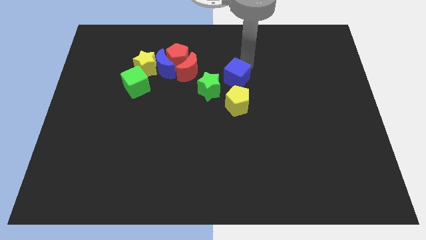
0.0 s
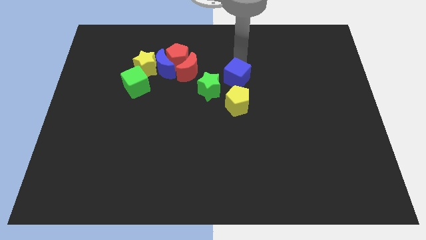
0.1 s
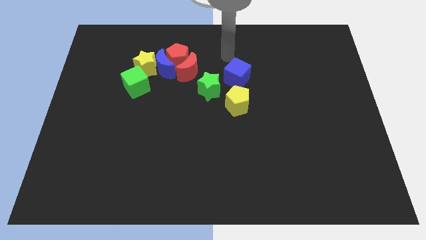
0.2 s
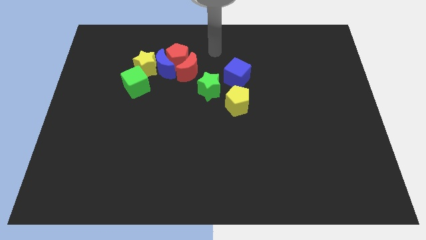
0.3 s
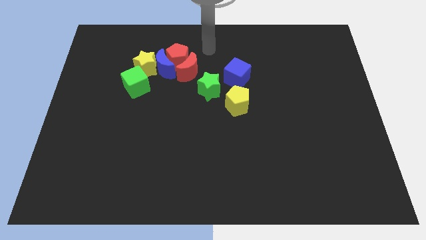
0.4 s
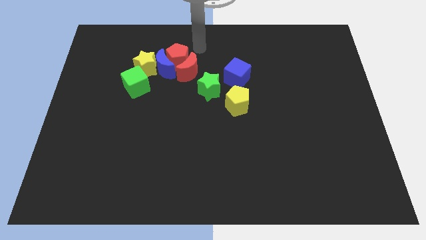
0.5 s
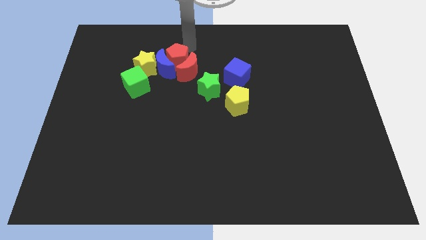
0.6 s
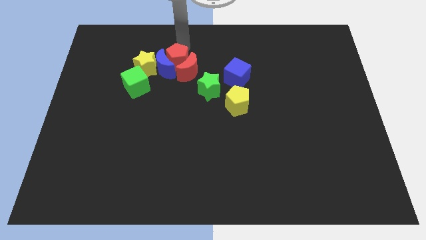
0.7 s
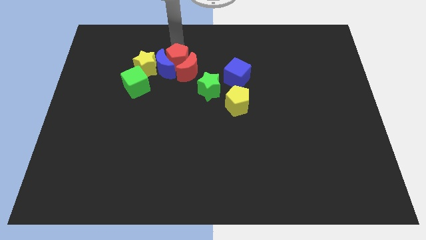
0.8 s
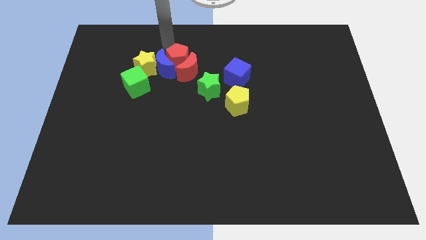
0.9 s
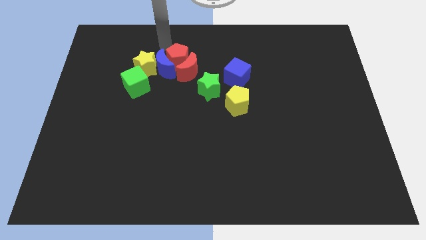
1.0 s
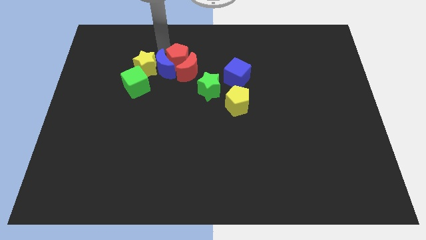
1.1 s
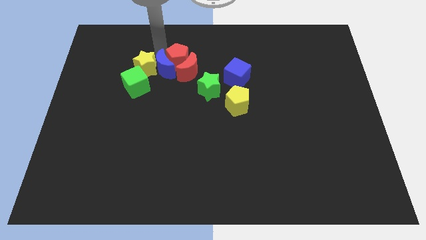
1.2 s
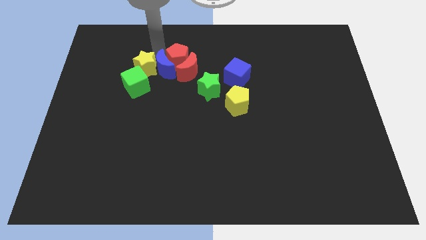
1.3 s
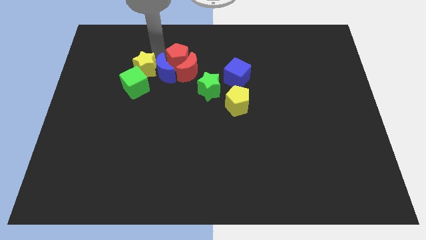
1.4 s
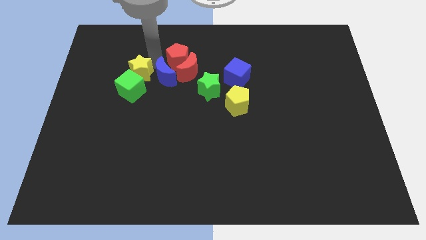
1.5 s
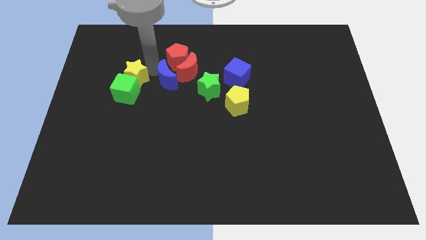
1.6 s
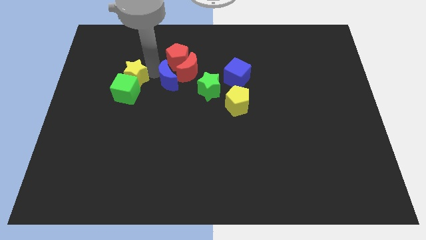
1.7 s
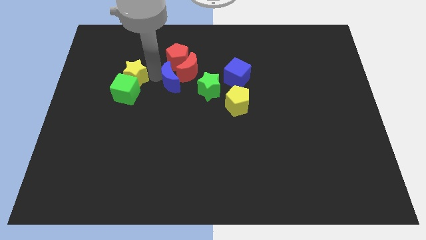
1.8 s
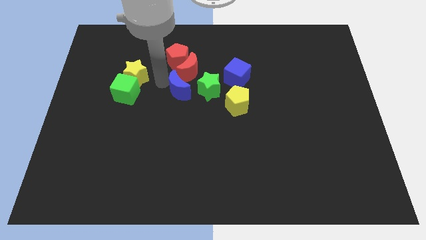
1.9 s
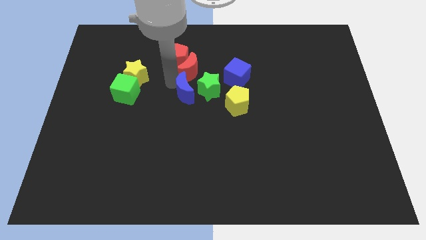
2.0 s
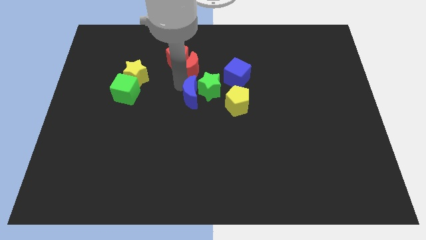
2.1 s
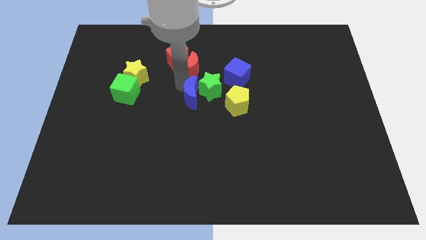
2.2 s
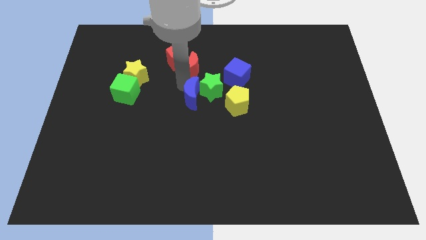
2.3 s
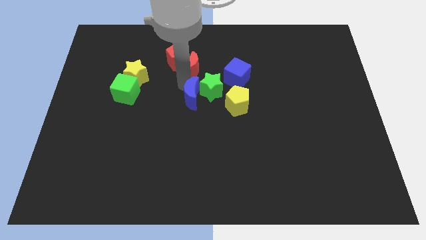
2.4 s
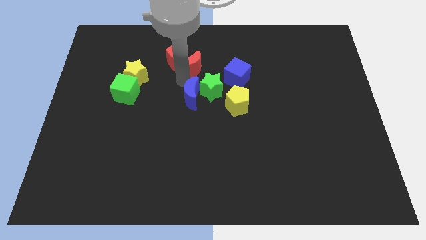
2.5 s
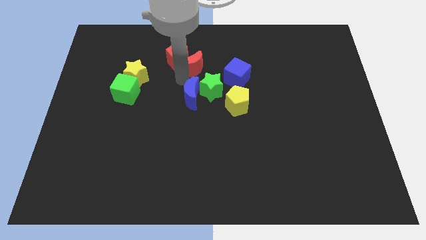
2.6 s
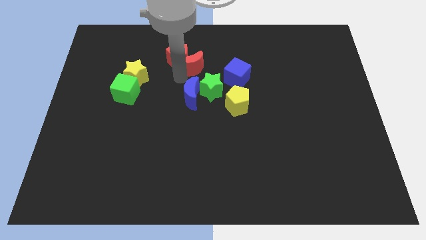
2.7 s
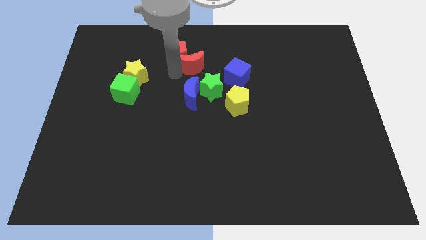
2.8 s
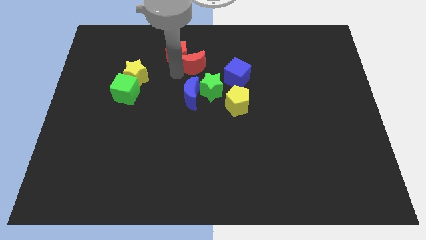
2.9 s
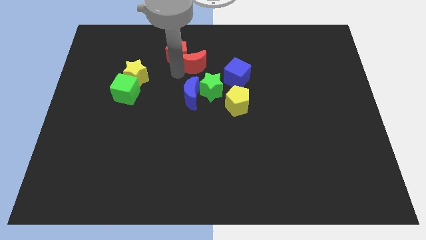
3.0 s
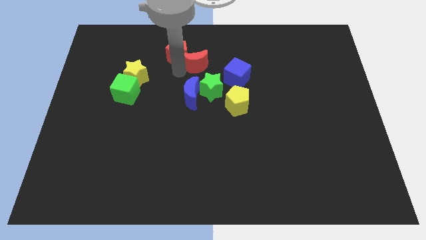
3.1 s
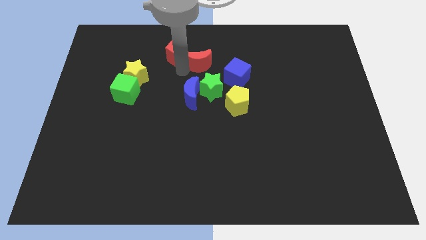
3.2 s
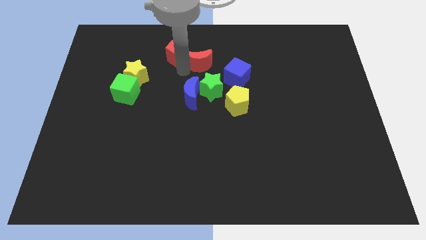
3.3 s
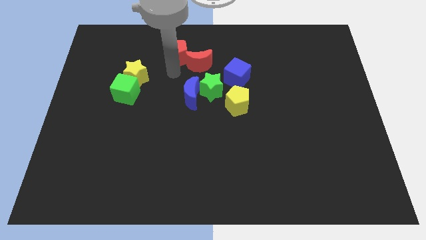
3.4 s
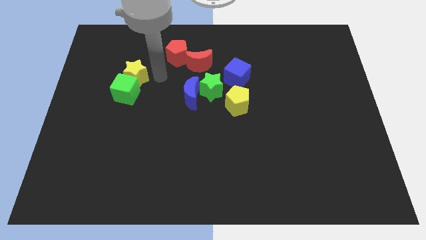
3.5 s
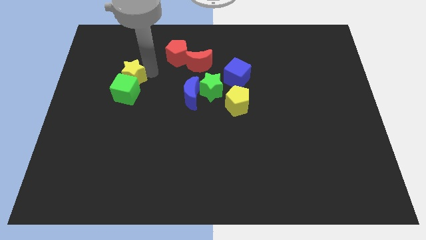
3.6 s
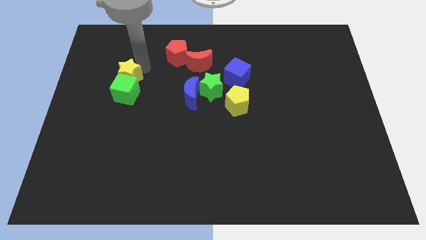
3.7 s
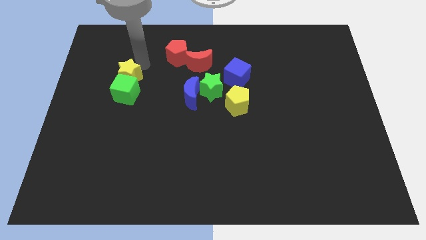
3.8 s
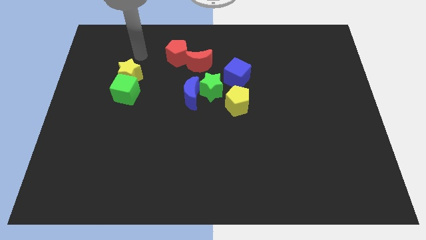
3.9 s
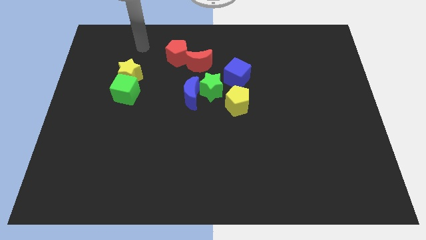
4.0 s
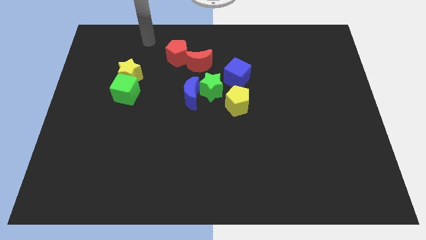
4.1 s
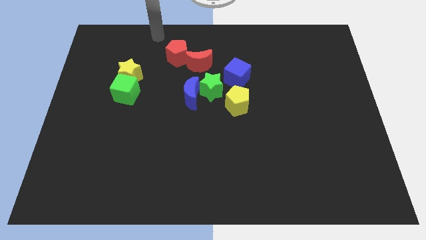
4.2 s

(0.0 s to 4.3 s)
move your arm away from the blue cube

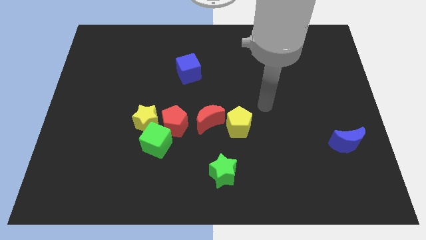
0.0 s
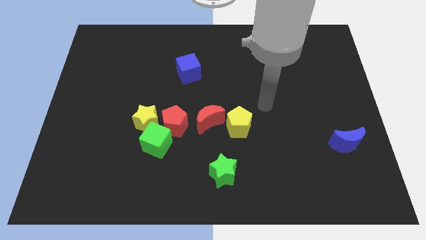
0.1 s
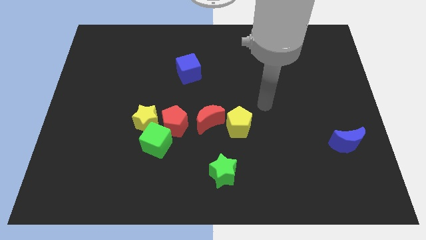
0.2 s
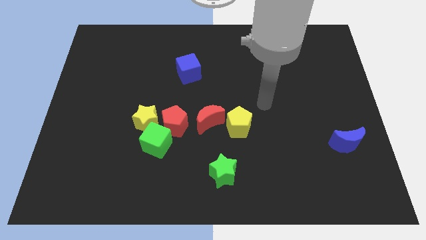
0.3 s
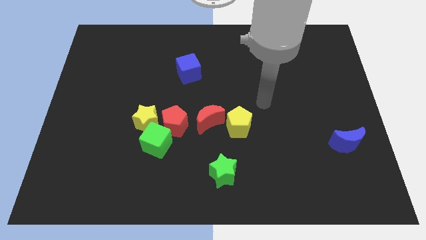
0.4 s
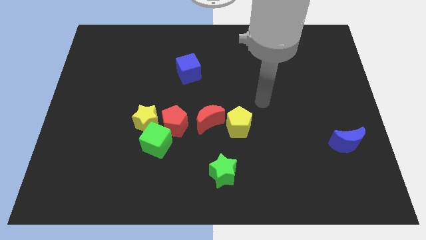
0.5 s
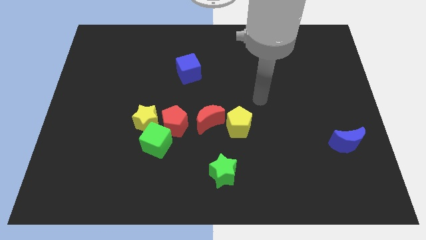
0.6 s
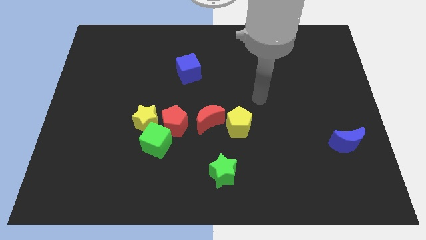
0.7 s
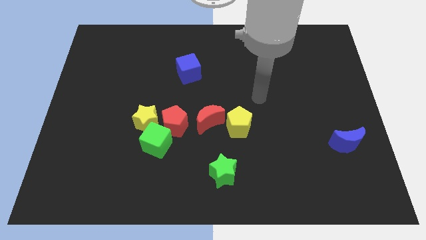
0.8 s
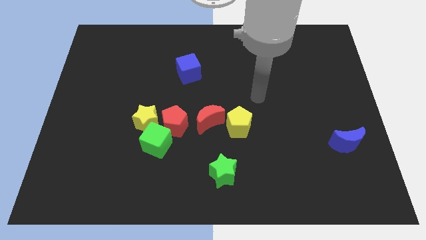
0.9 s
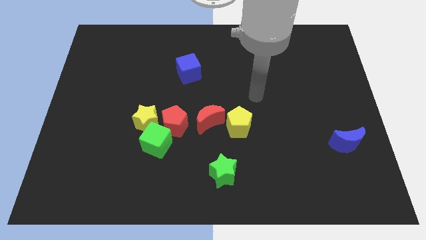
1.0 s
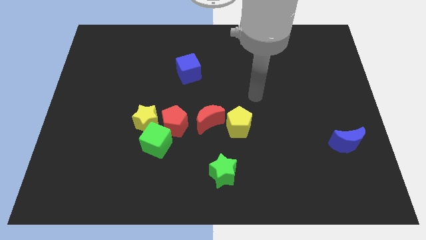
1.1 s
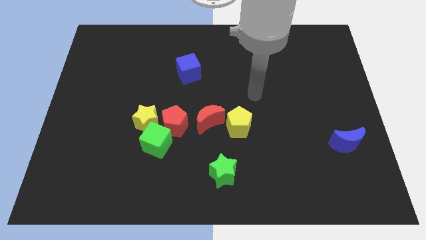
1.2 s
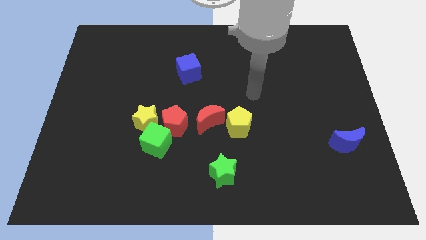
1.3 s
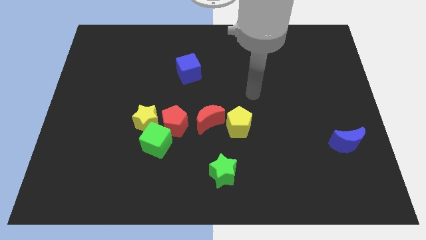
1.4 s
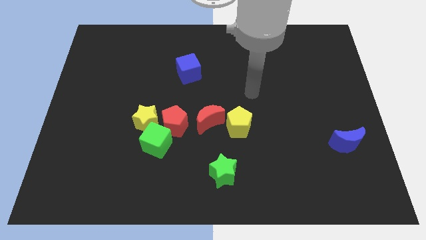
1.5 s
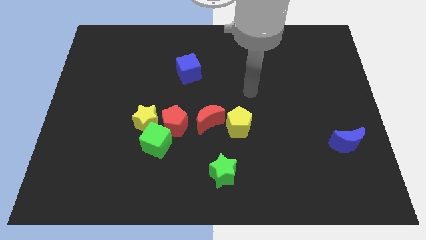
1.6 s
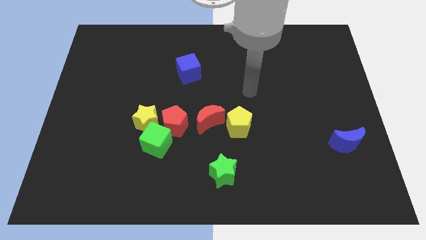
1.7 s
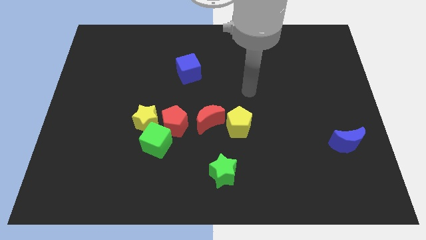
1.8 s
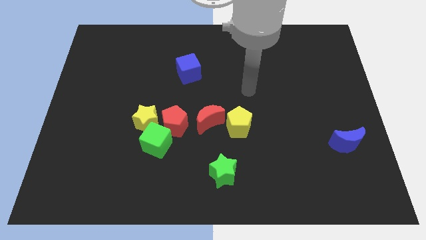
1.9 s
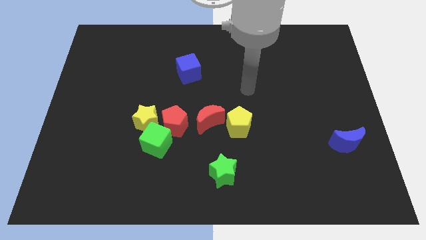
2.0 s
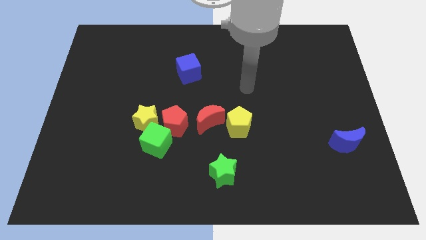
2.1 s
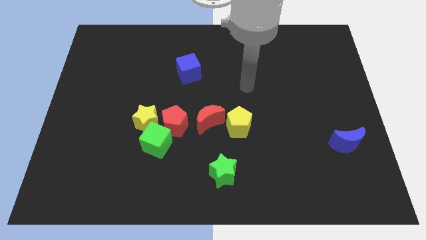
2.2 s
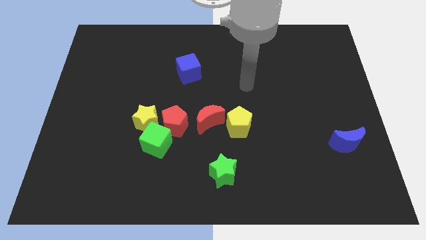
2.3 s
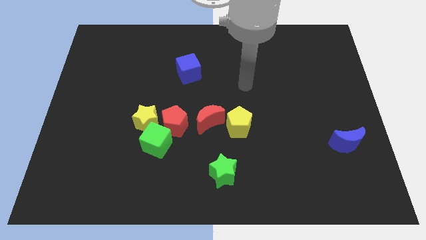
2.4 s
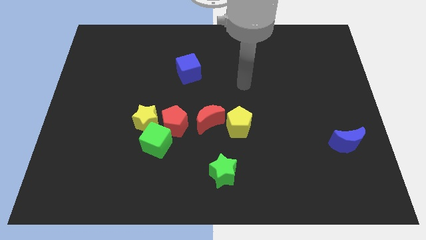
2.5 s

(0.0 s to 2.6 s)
move arm at the center

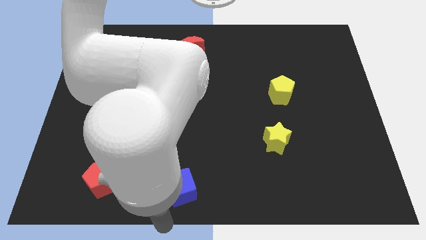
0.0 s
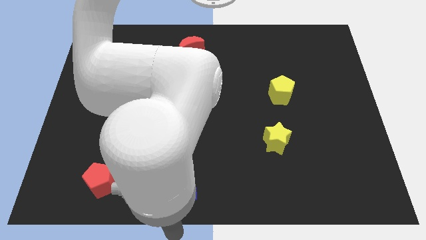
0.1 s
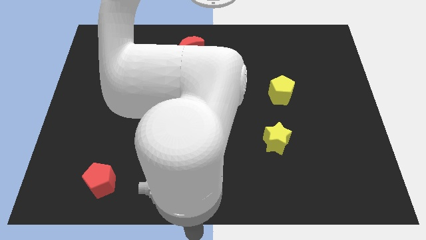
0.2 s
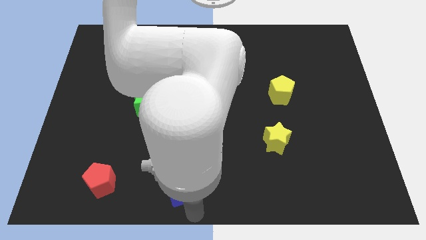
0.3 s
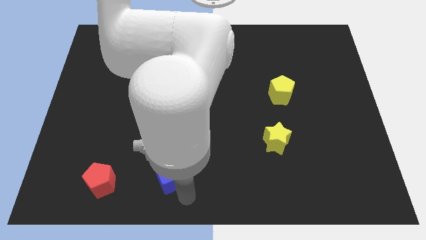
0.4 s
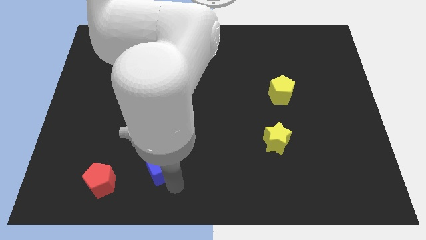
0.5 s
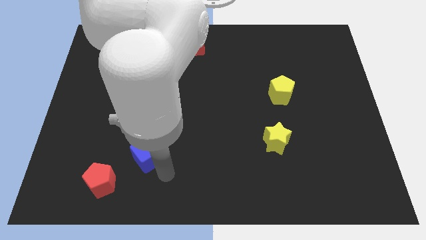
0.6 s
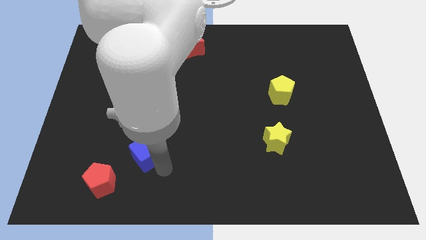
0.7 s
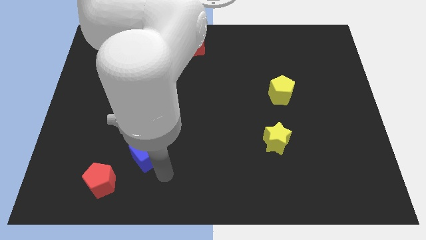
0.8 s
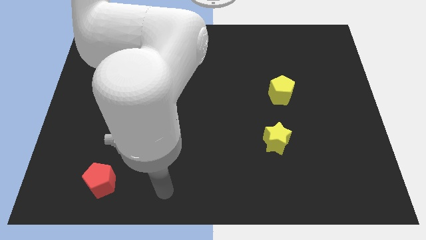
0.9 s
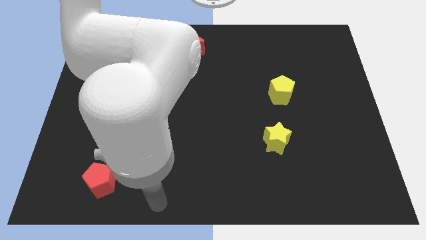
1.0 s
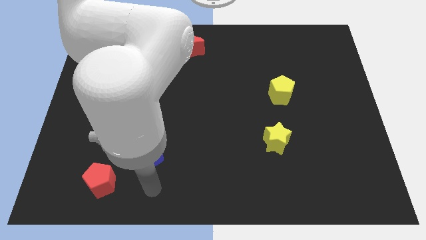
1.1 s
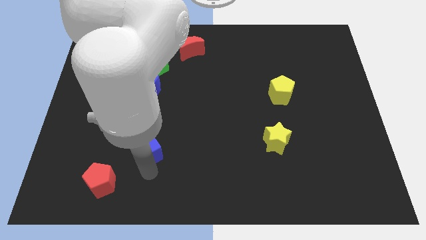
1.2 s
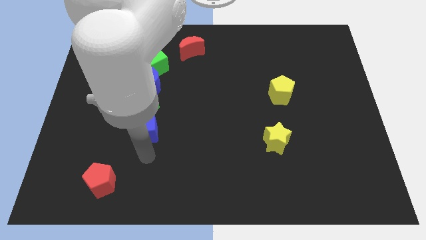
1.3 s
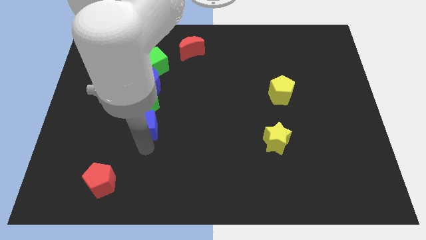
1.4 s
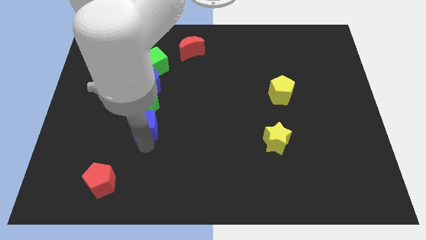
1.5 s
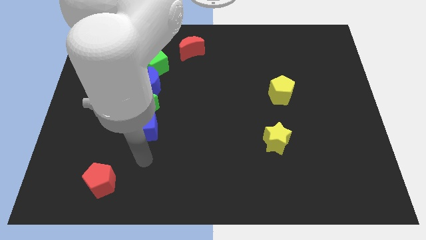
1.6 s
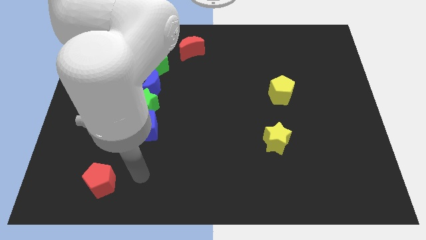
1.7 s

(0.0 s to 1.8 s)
move the blue cube below the green star
